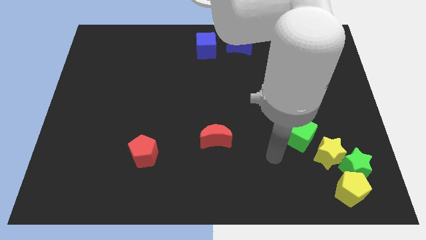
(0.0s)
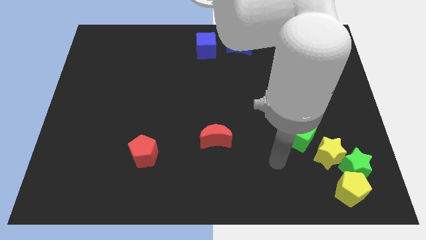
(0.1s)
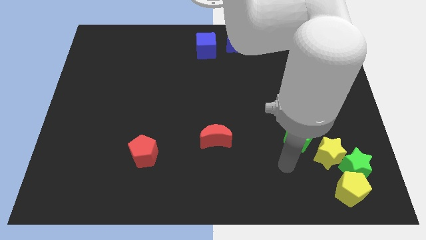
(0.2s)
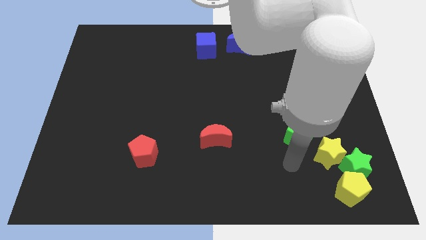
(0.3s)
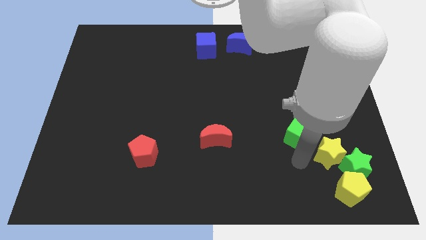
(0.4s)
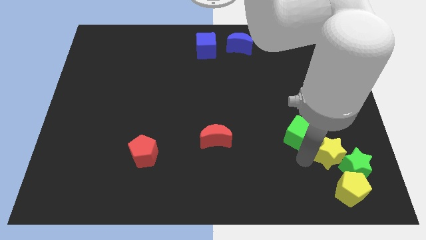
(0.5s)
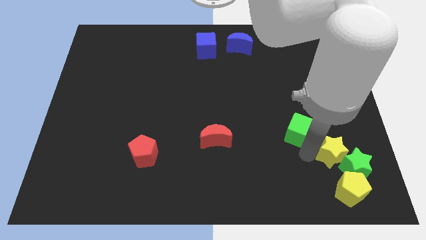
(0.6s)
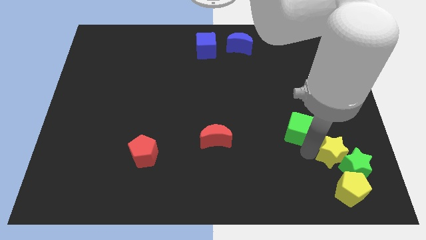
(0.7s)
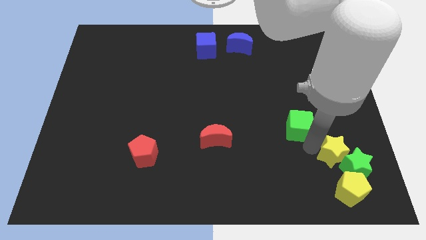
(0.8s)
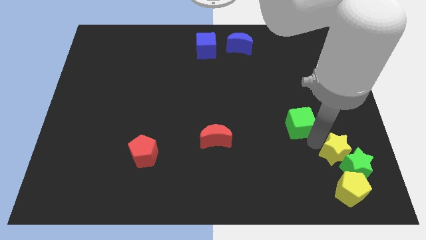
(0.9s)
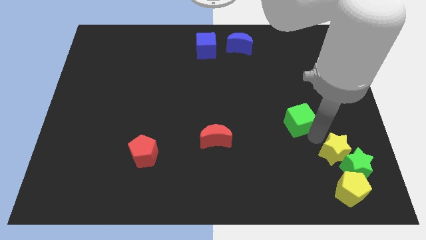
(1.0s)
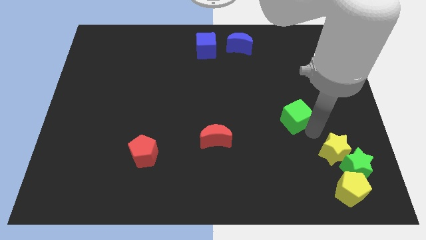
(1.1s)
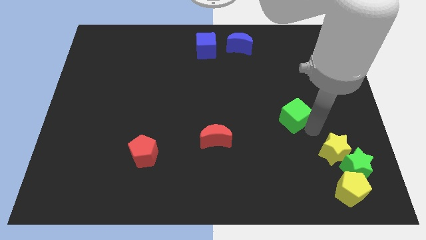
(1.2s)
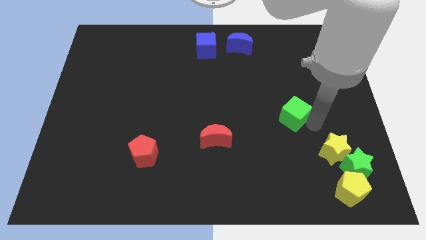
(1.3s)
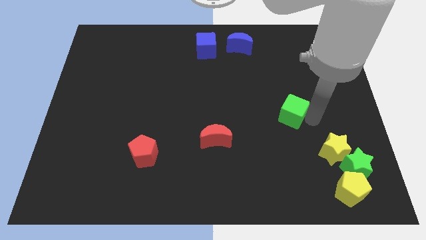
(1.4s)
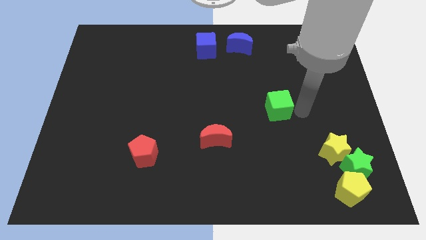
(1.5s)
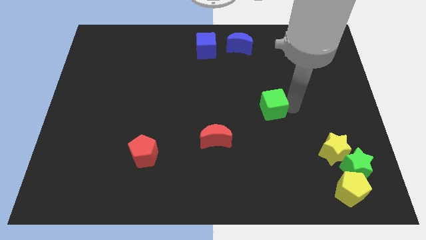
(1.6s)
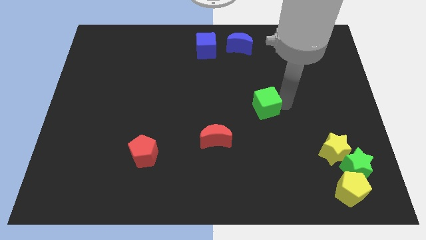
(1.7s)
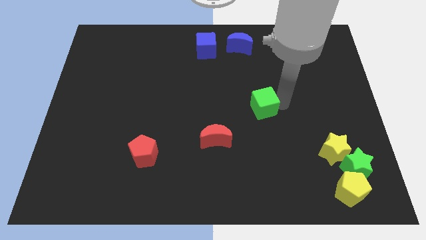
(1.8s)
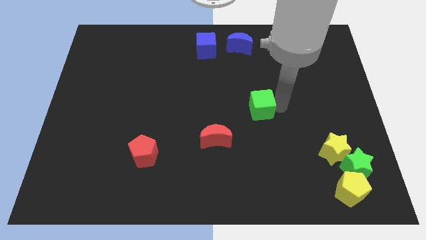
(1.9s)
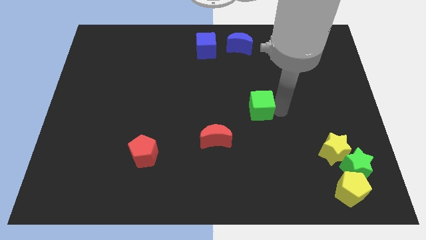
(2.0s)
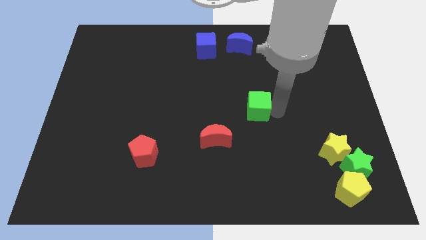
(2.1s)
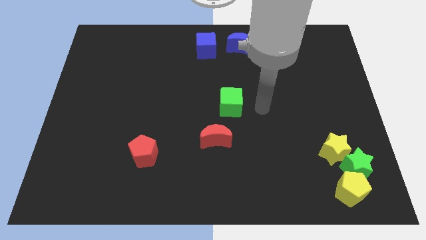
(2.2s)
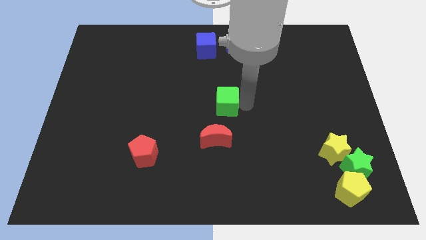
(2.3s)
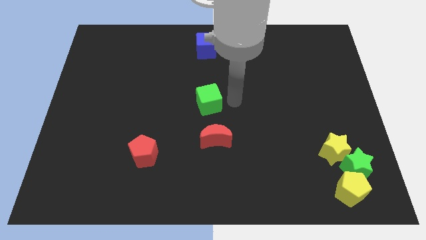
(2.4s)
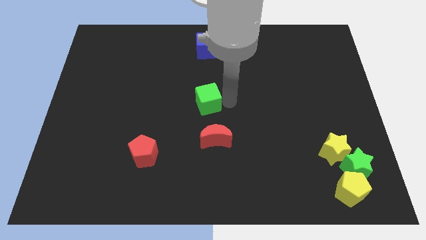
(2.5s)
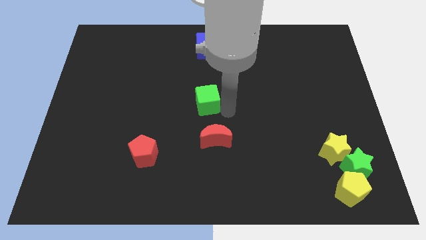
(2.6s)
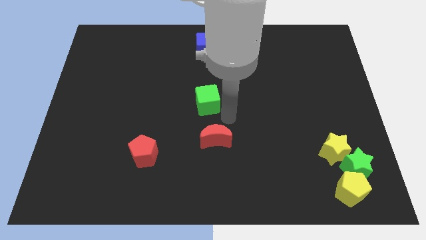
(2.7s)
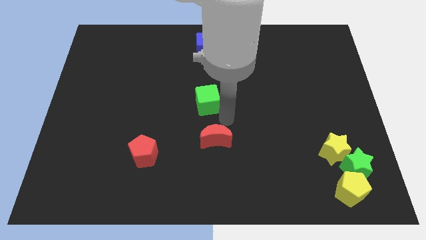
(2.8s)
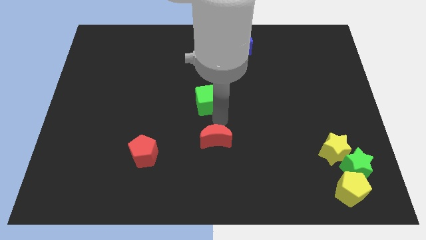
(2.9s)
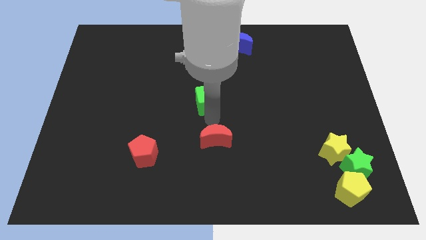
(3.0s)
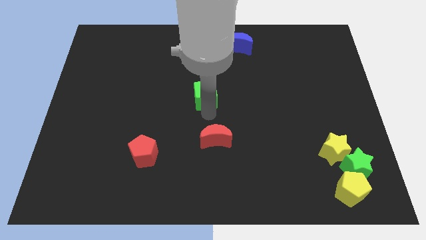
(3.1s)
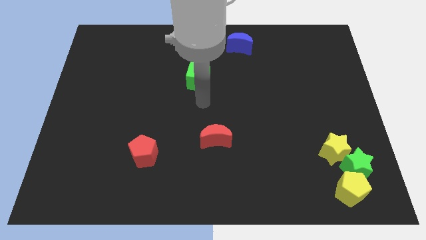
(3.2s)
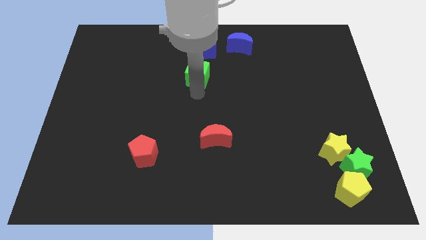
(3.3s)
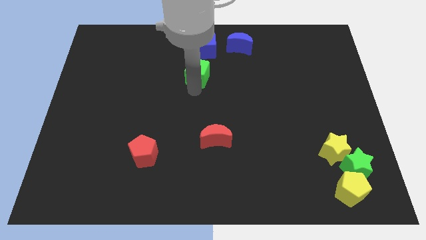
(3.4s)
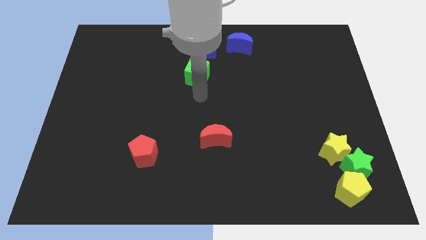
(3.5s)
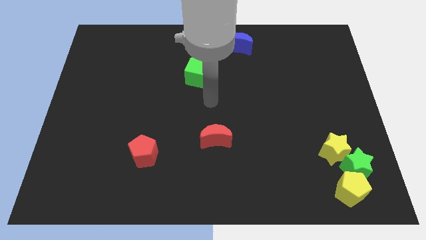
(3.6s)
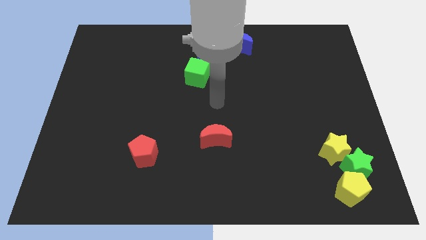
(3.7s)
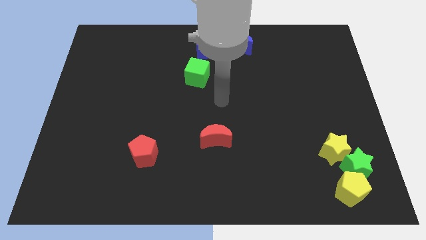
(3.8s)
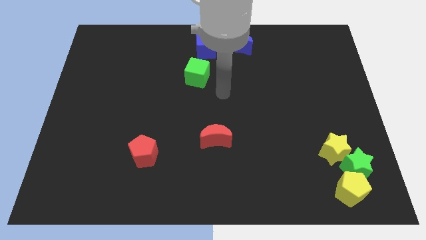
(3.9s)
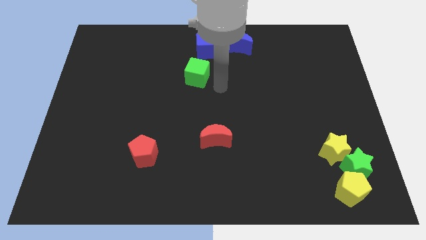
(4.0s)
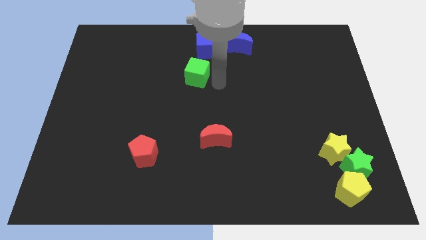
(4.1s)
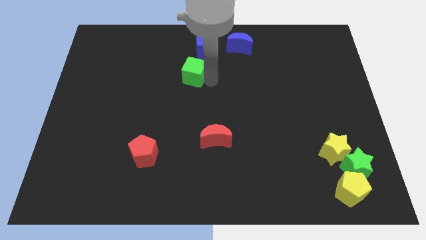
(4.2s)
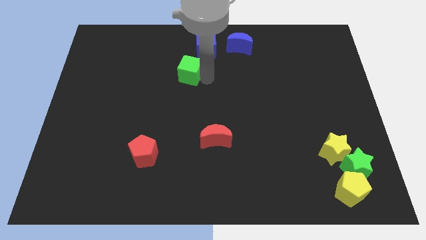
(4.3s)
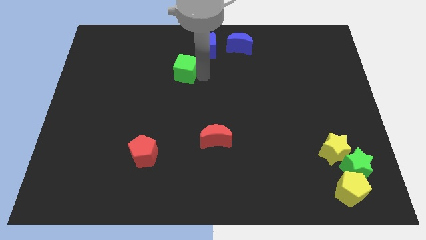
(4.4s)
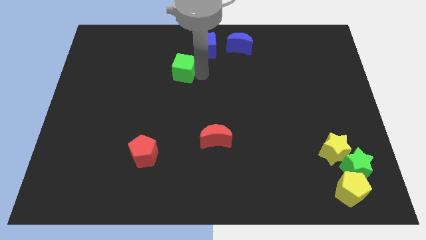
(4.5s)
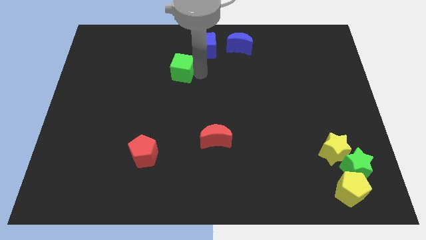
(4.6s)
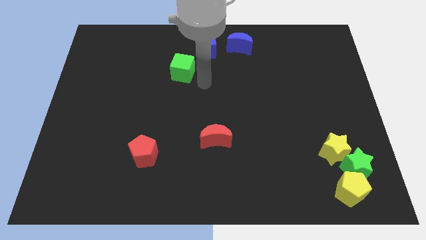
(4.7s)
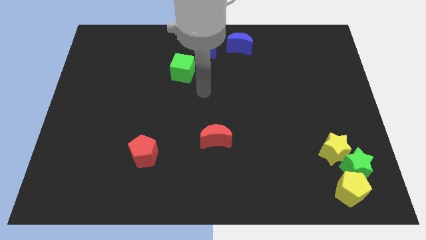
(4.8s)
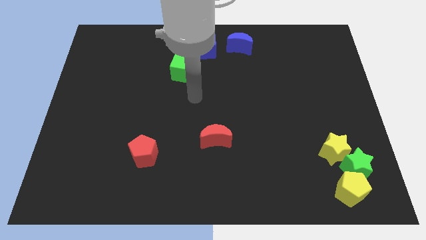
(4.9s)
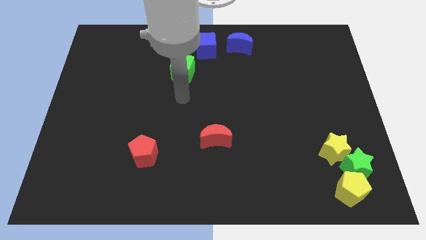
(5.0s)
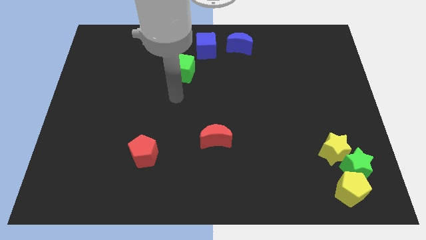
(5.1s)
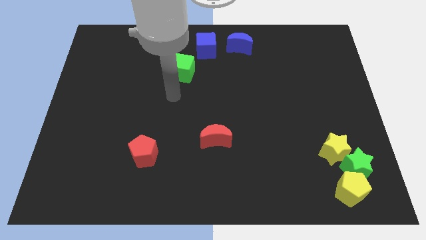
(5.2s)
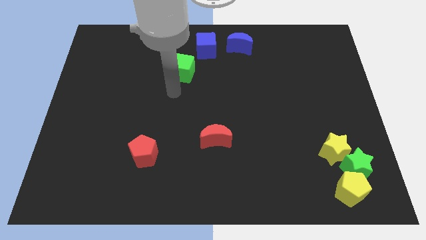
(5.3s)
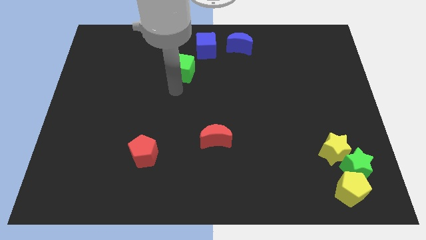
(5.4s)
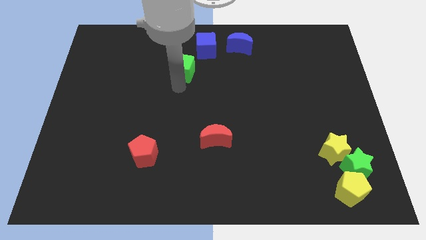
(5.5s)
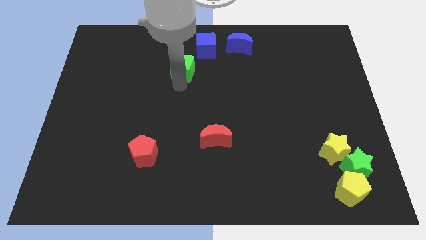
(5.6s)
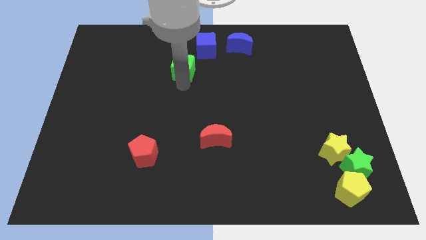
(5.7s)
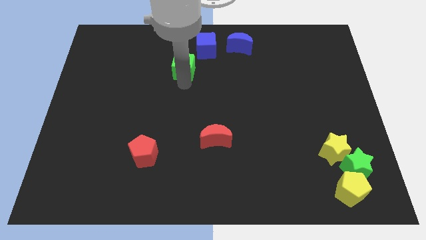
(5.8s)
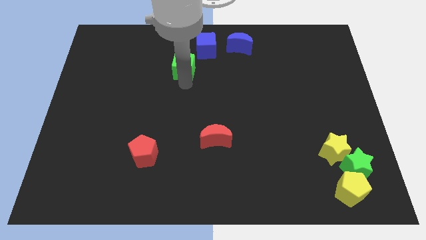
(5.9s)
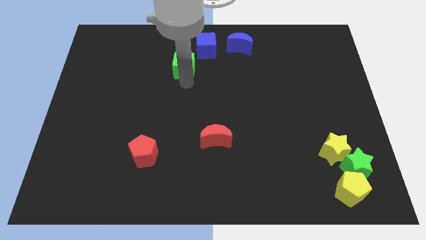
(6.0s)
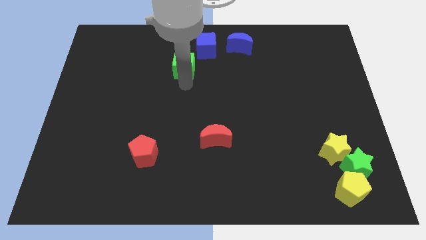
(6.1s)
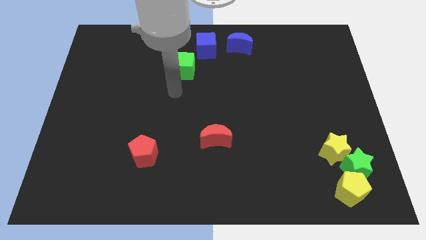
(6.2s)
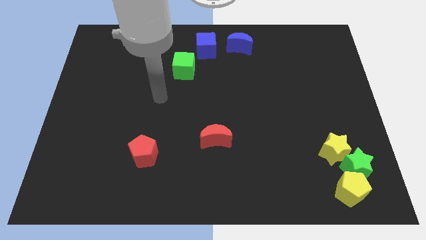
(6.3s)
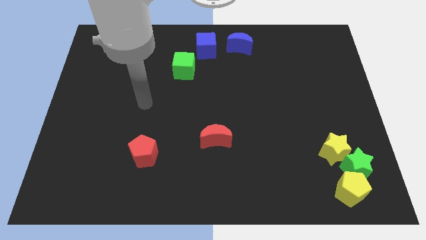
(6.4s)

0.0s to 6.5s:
move the green cube diagonally left to the blue cube

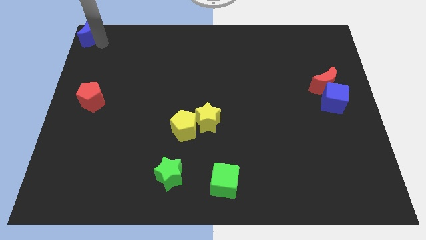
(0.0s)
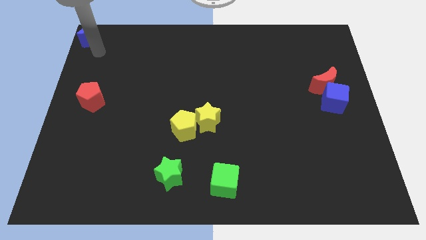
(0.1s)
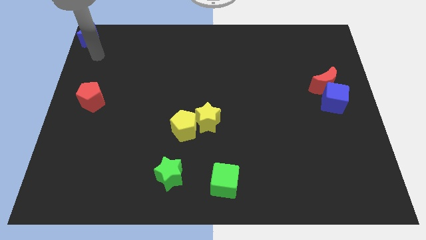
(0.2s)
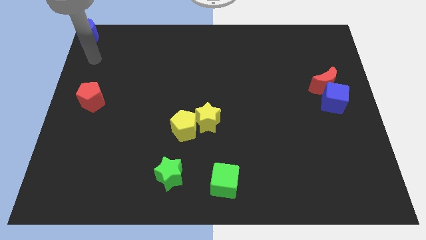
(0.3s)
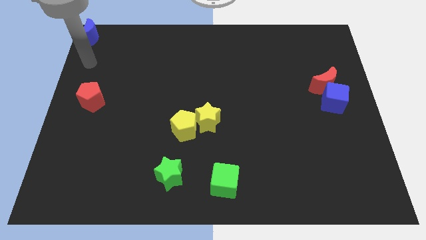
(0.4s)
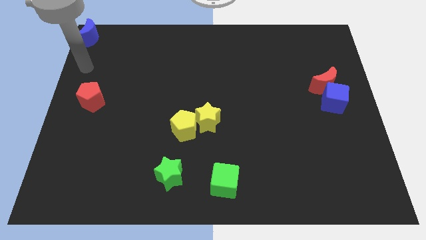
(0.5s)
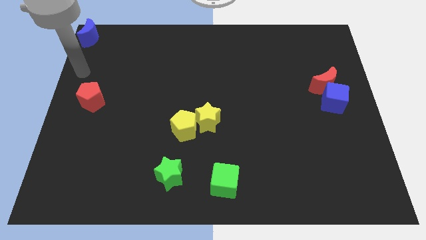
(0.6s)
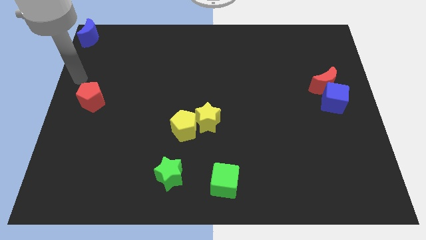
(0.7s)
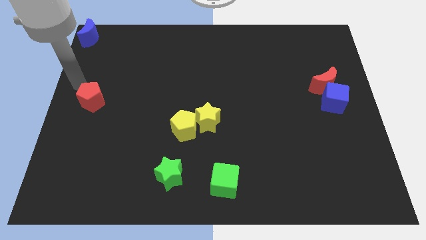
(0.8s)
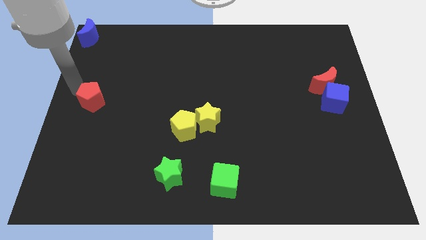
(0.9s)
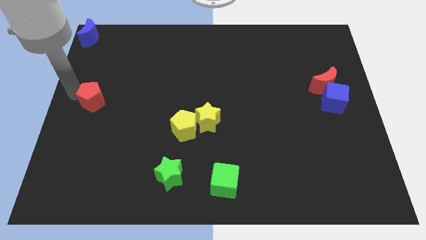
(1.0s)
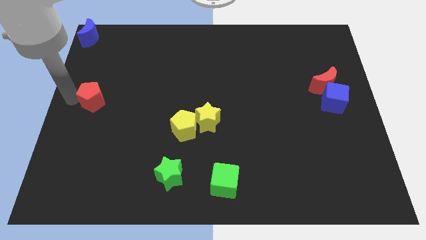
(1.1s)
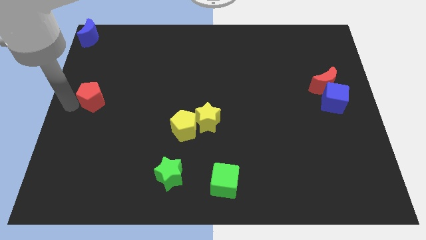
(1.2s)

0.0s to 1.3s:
go away from the blue moon

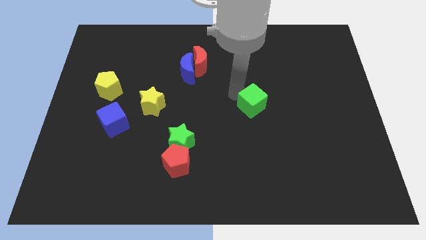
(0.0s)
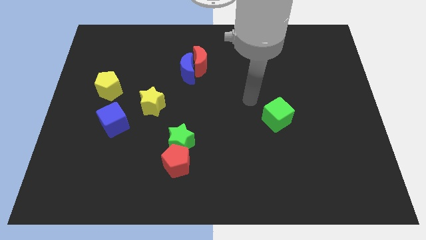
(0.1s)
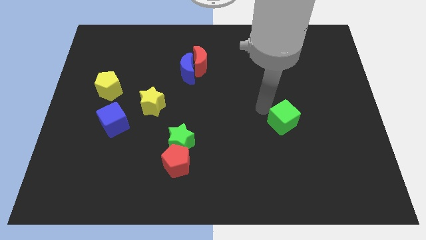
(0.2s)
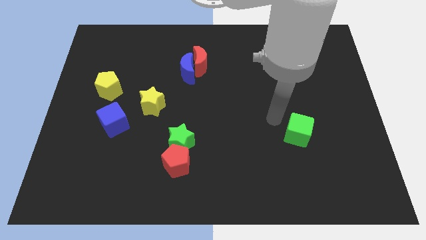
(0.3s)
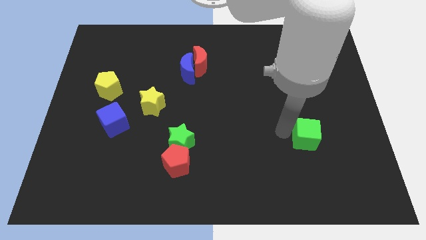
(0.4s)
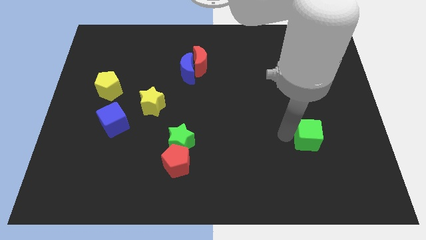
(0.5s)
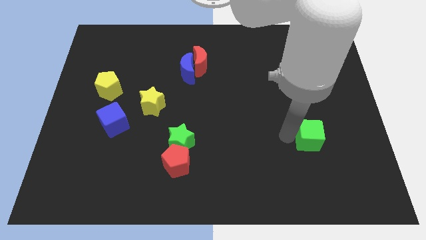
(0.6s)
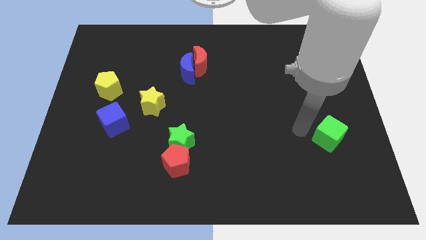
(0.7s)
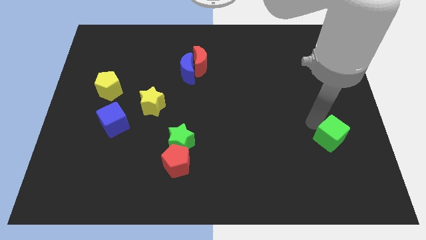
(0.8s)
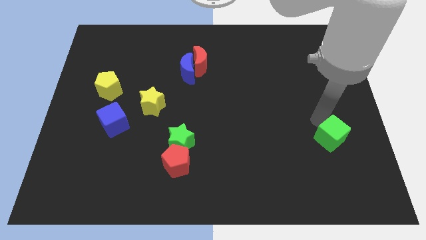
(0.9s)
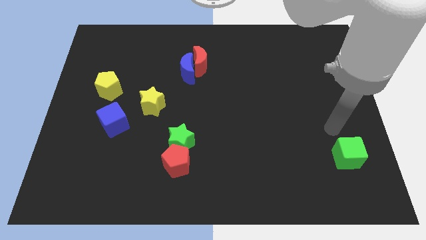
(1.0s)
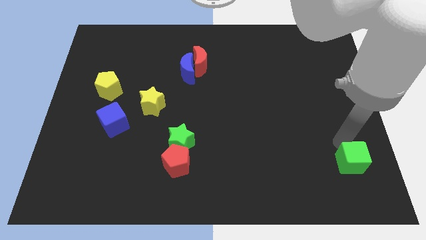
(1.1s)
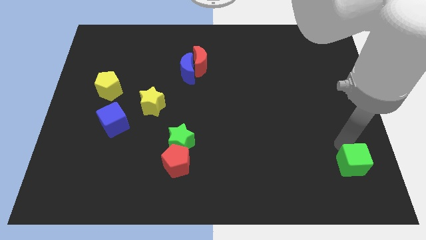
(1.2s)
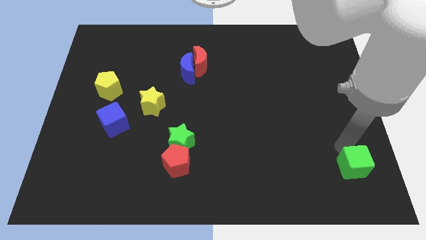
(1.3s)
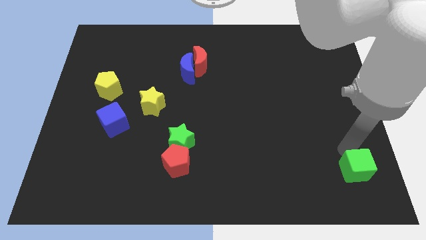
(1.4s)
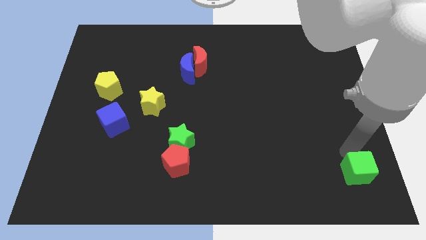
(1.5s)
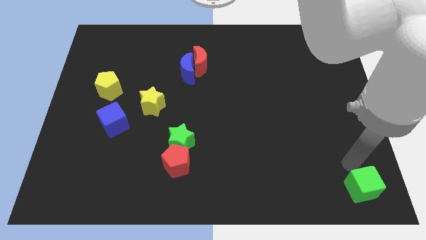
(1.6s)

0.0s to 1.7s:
move the green cube to the bottom right of the board
